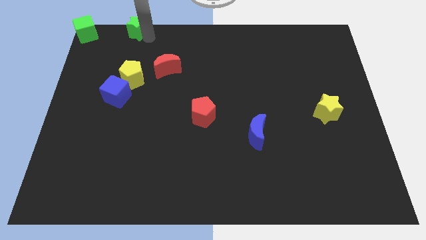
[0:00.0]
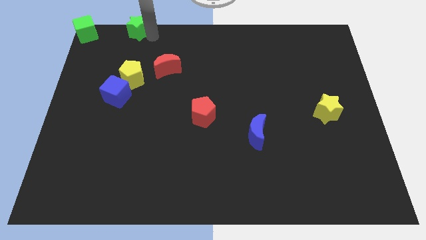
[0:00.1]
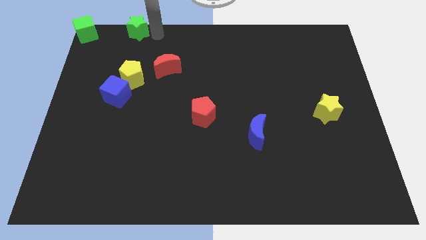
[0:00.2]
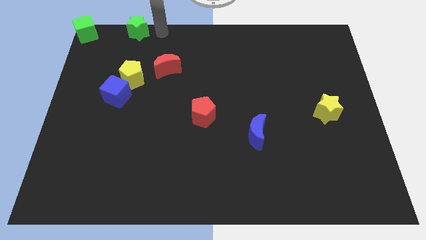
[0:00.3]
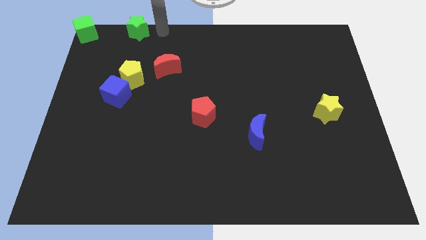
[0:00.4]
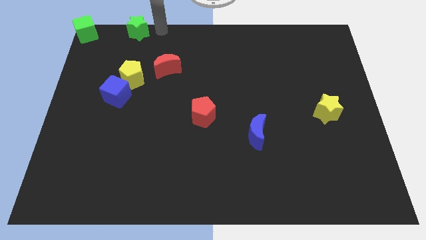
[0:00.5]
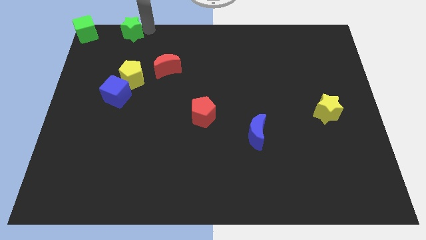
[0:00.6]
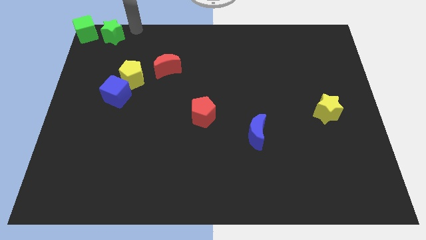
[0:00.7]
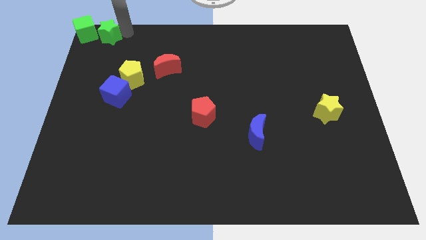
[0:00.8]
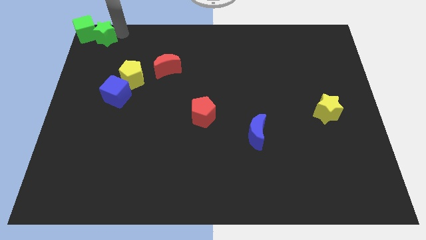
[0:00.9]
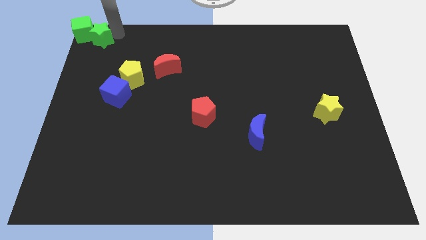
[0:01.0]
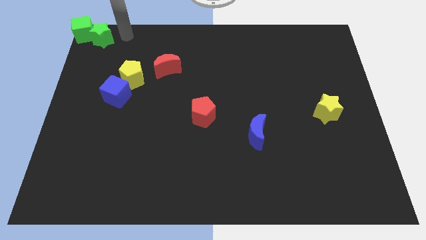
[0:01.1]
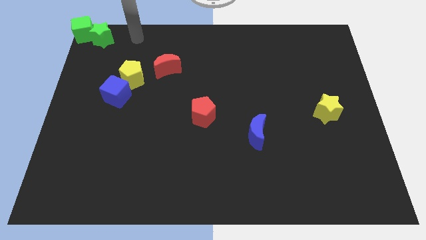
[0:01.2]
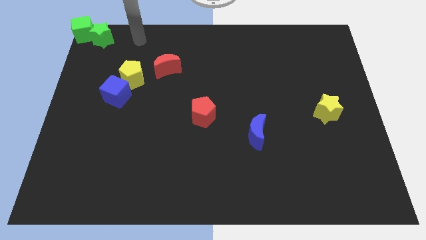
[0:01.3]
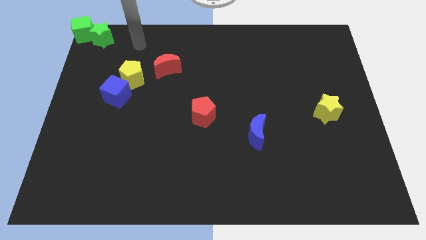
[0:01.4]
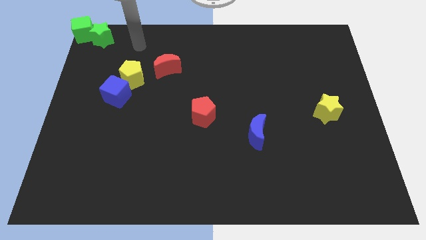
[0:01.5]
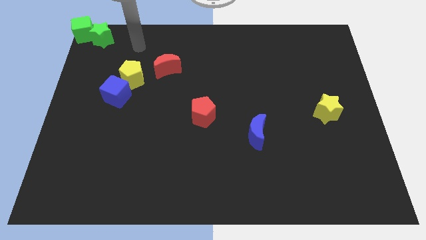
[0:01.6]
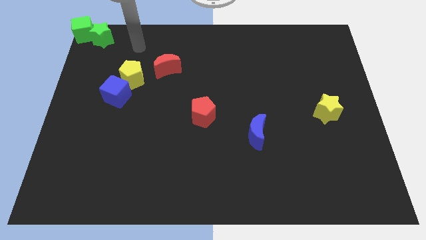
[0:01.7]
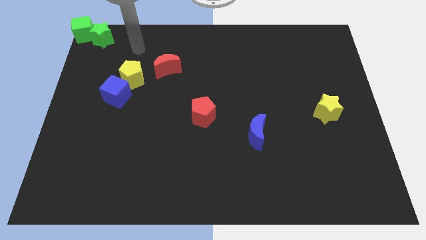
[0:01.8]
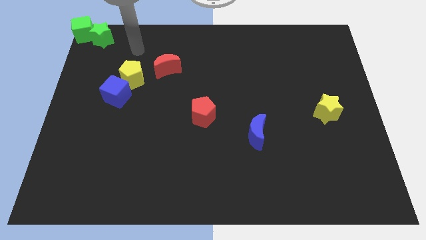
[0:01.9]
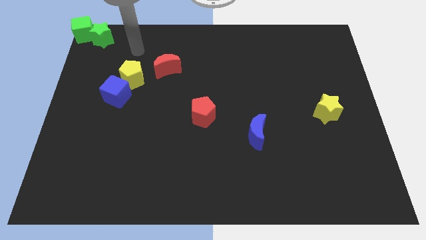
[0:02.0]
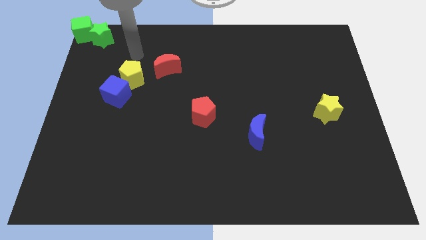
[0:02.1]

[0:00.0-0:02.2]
move the green star close to green cube

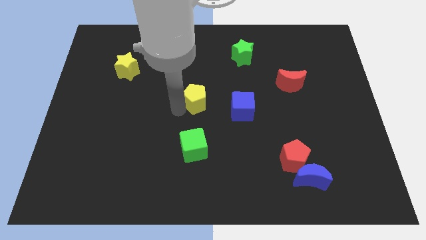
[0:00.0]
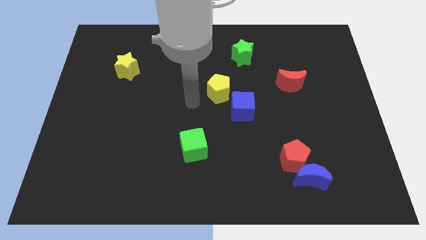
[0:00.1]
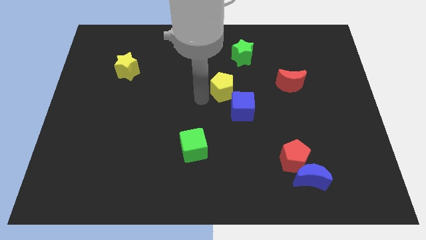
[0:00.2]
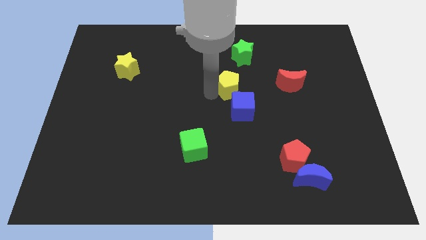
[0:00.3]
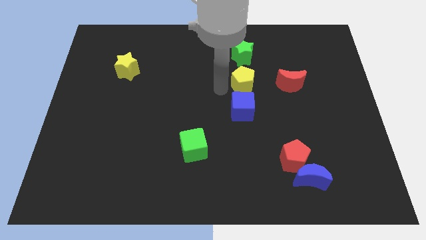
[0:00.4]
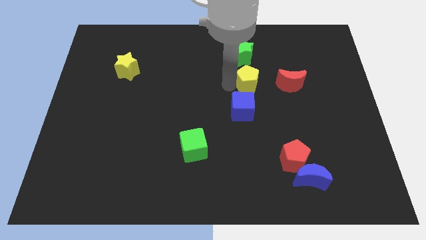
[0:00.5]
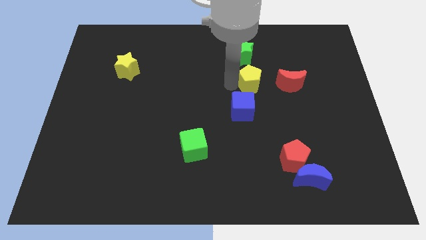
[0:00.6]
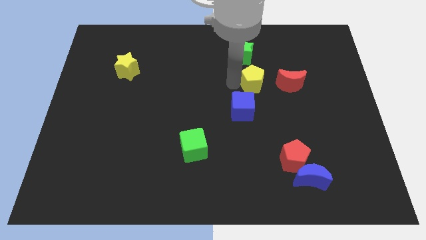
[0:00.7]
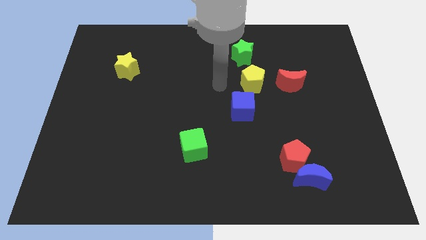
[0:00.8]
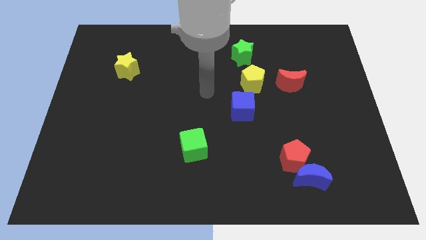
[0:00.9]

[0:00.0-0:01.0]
place the yellow pentagon left to the red moon

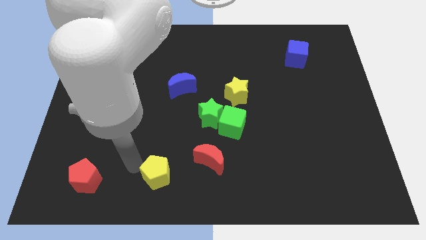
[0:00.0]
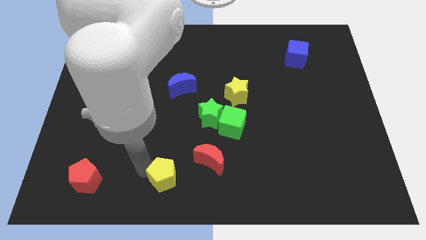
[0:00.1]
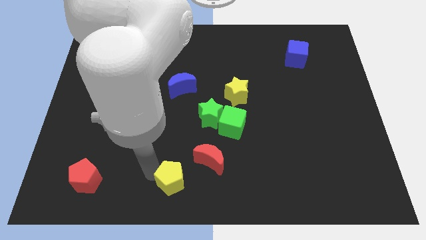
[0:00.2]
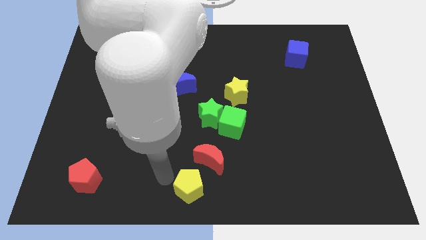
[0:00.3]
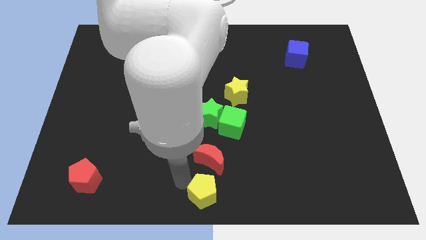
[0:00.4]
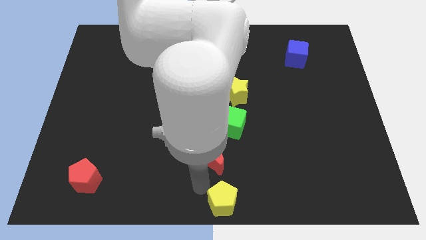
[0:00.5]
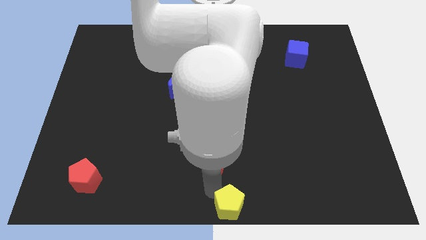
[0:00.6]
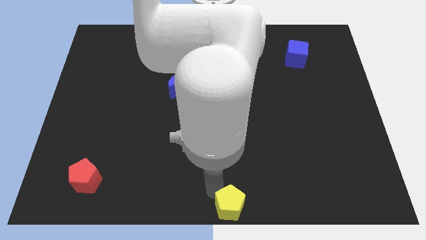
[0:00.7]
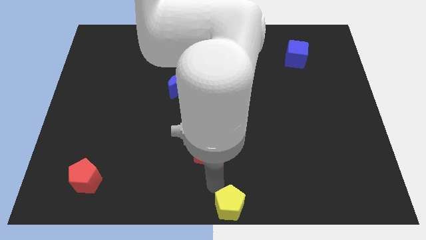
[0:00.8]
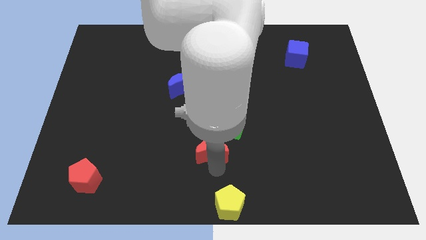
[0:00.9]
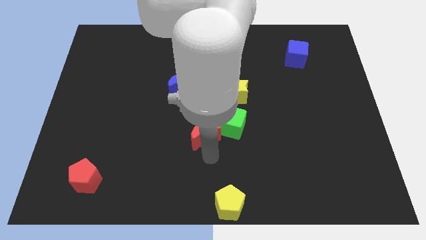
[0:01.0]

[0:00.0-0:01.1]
push the yellow pentagon bottom center

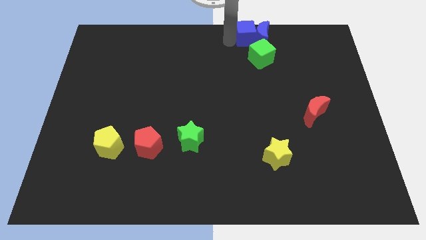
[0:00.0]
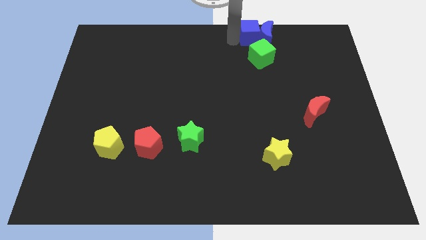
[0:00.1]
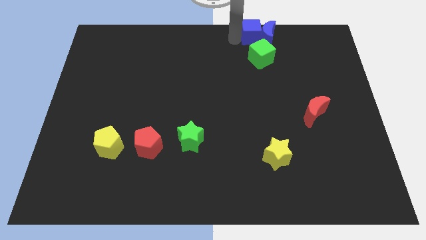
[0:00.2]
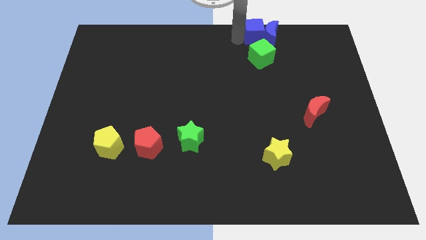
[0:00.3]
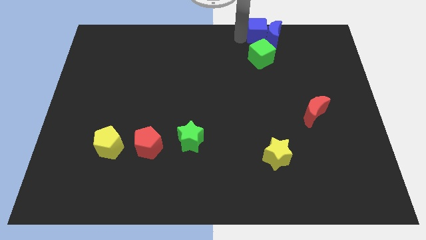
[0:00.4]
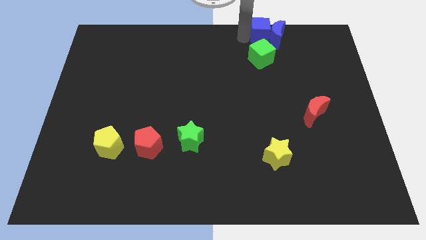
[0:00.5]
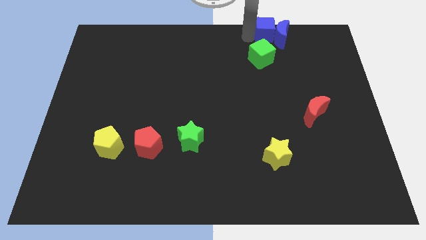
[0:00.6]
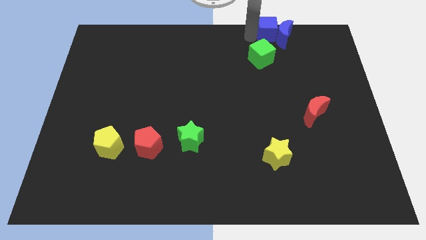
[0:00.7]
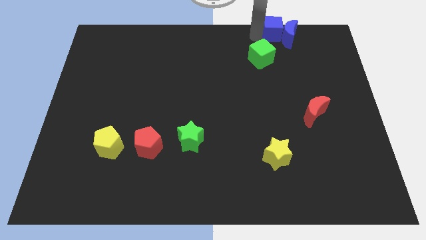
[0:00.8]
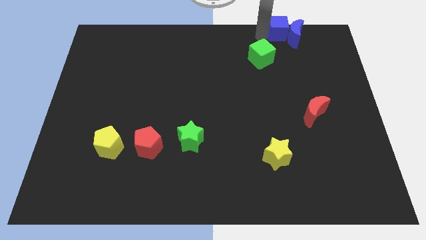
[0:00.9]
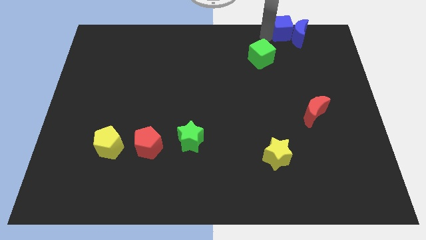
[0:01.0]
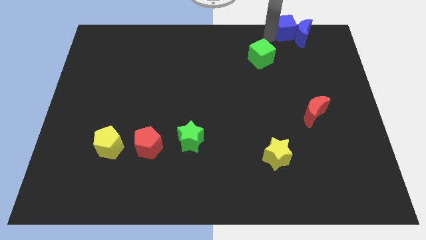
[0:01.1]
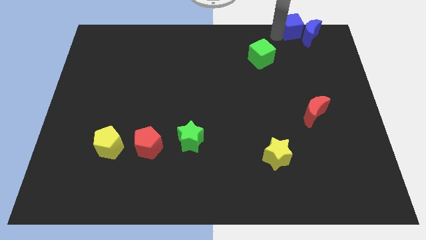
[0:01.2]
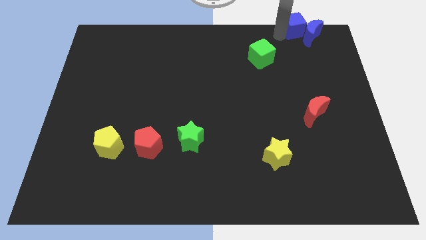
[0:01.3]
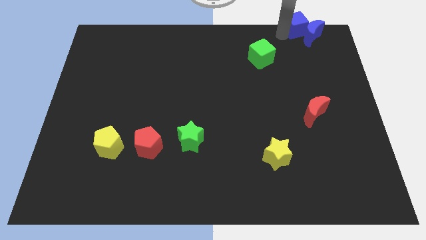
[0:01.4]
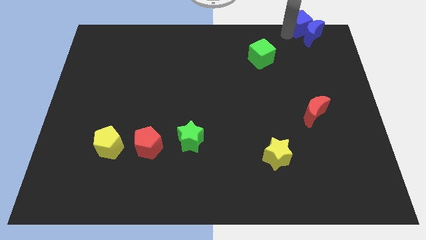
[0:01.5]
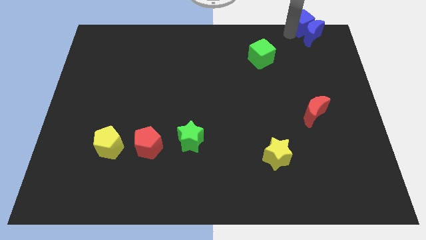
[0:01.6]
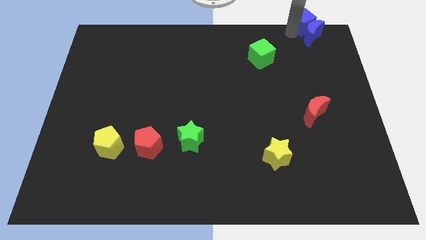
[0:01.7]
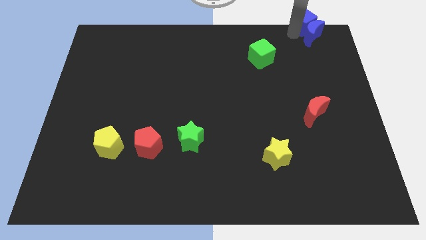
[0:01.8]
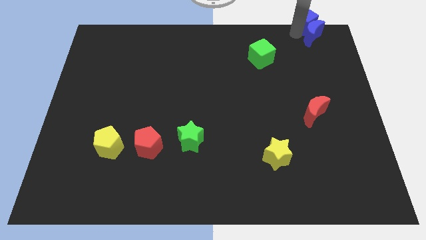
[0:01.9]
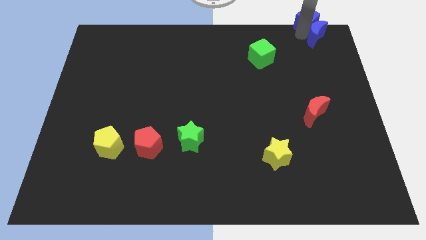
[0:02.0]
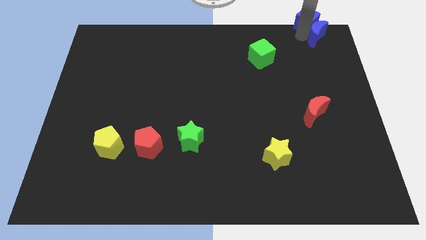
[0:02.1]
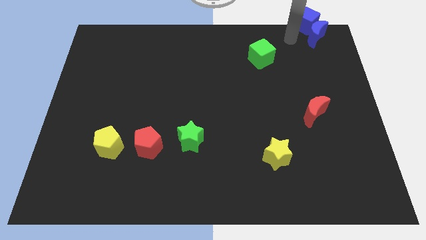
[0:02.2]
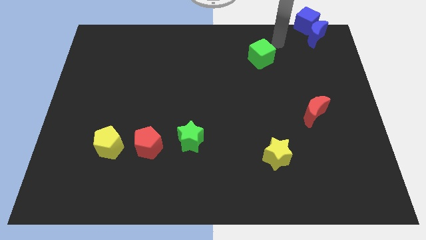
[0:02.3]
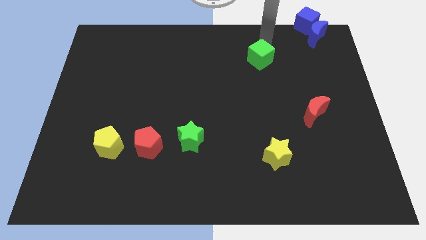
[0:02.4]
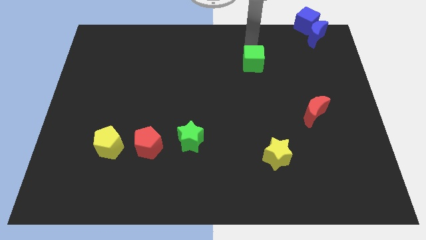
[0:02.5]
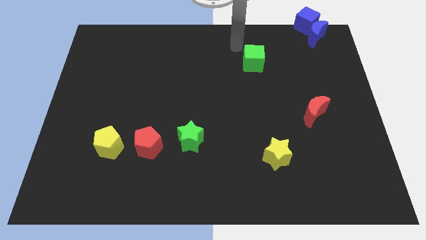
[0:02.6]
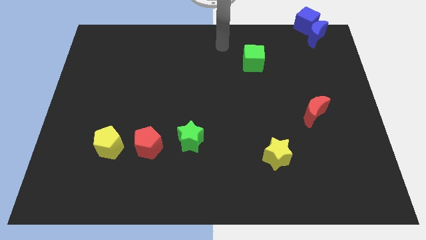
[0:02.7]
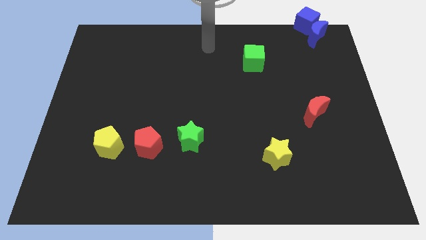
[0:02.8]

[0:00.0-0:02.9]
slide the blue blocks to the top right

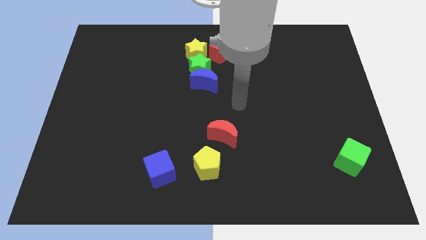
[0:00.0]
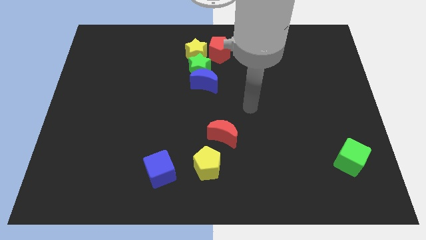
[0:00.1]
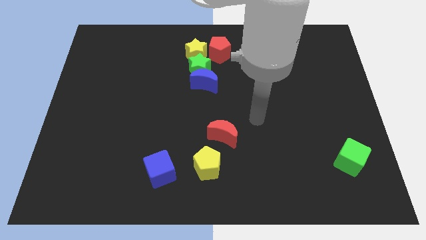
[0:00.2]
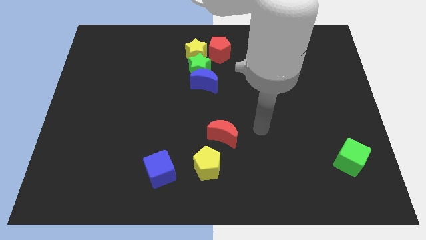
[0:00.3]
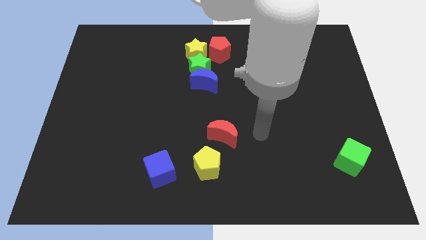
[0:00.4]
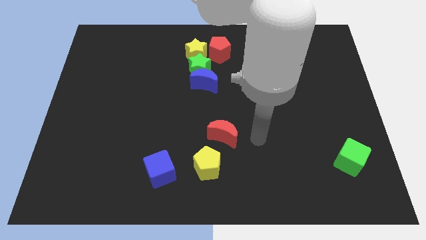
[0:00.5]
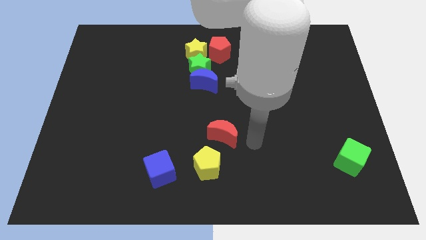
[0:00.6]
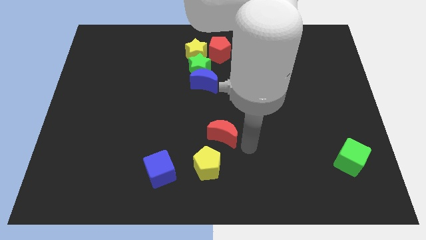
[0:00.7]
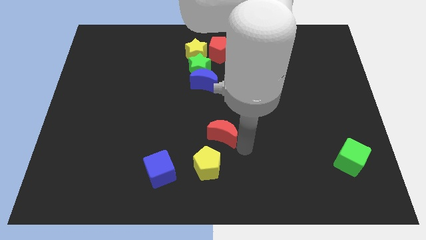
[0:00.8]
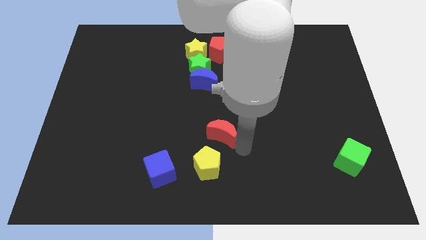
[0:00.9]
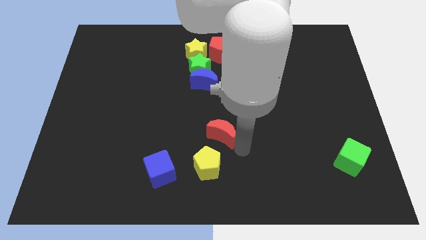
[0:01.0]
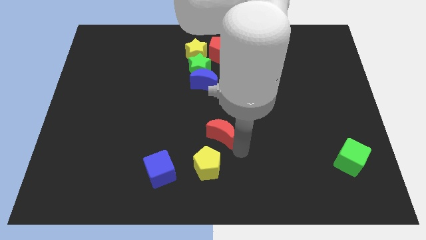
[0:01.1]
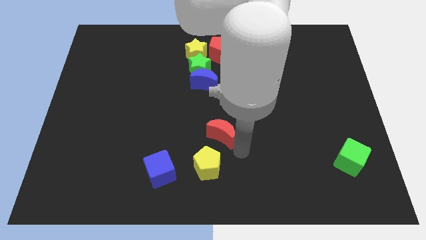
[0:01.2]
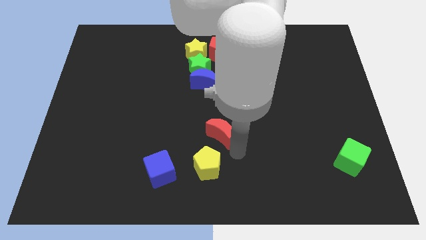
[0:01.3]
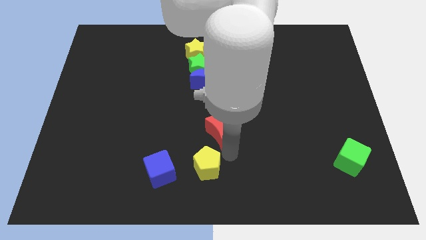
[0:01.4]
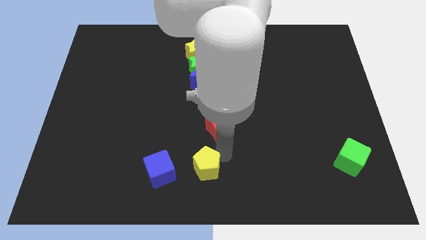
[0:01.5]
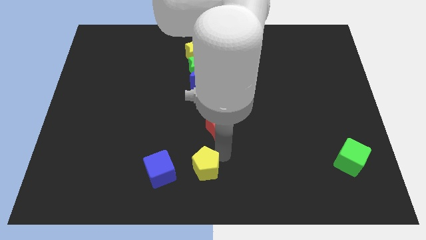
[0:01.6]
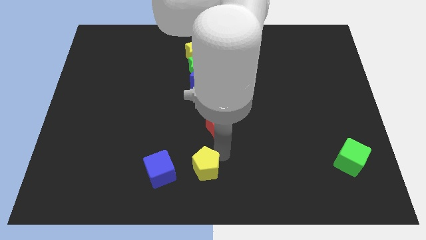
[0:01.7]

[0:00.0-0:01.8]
push the red moon and yellow pentagon towards left side
